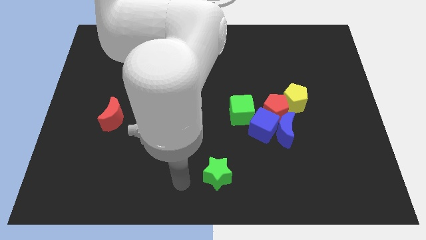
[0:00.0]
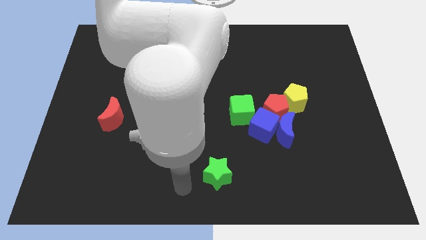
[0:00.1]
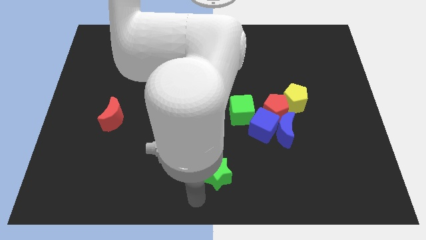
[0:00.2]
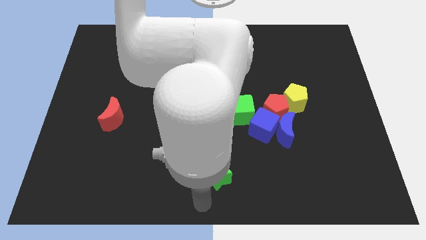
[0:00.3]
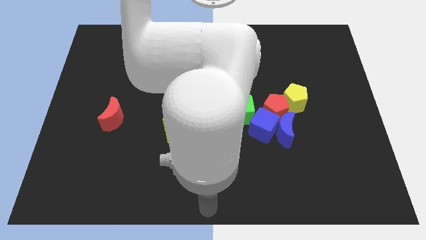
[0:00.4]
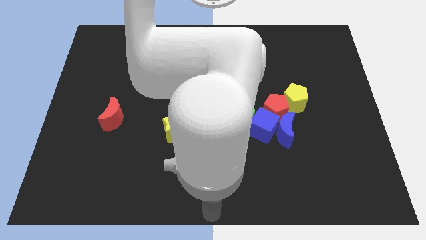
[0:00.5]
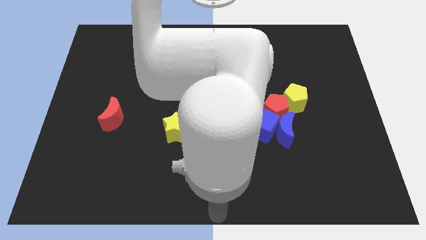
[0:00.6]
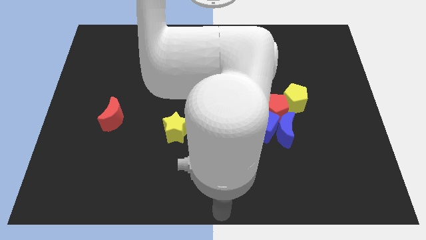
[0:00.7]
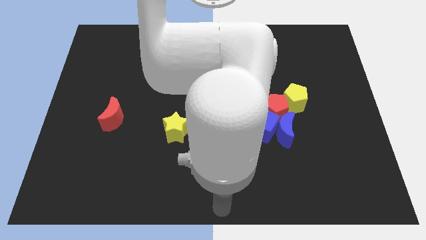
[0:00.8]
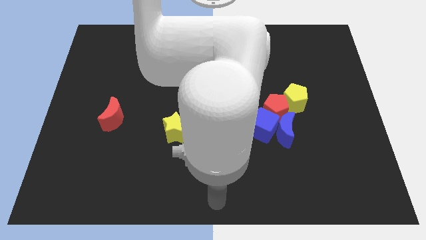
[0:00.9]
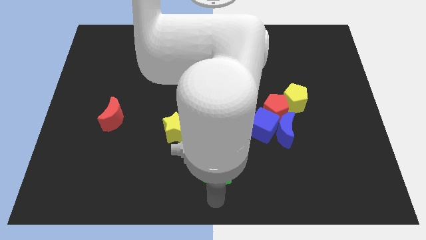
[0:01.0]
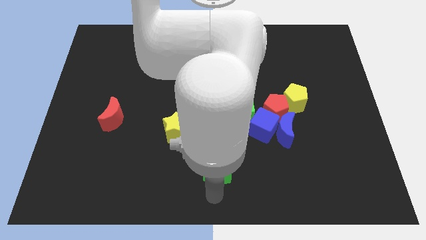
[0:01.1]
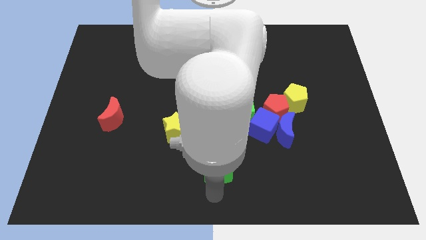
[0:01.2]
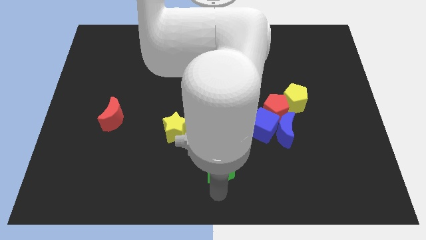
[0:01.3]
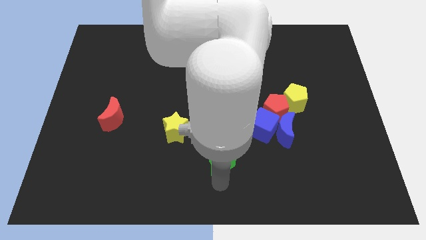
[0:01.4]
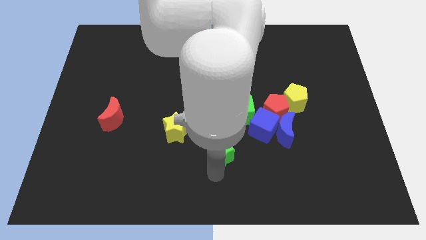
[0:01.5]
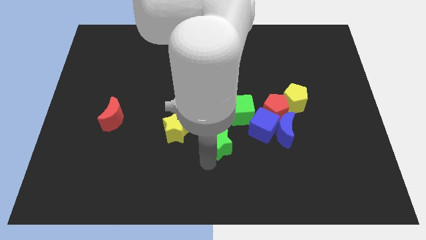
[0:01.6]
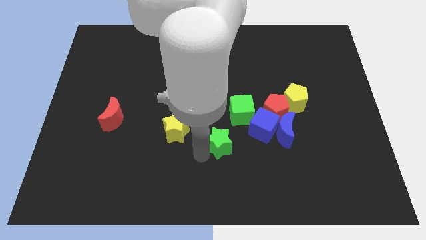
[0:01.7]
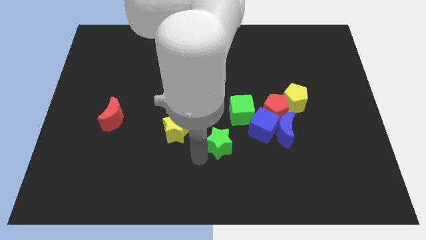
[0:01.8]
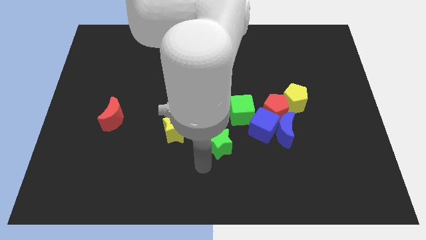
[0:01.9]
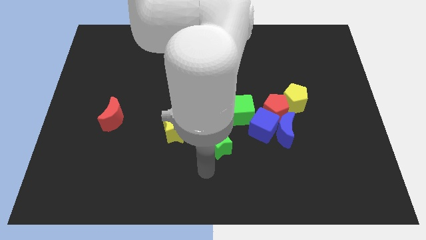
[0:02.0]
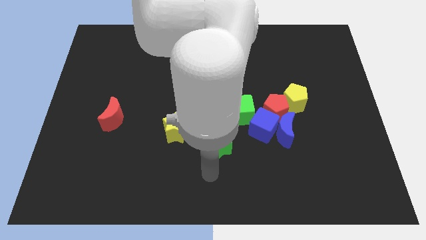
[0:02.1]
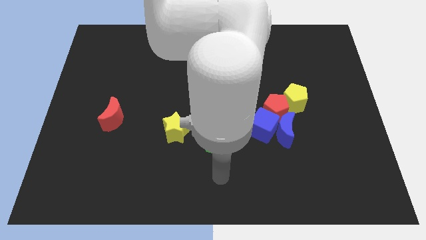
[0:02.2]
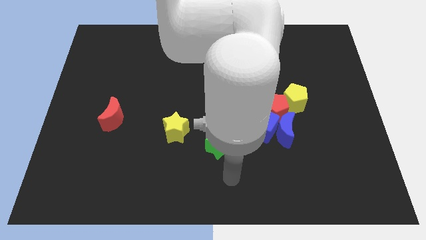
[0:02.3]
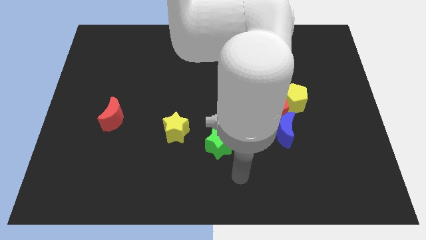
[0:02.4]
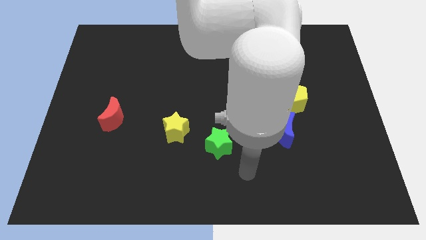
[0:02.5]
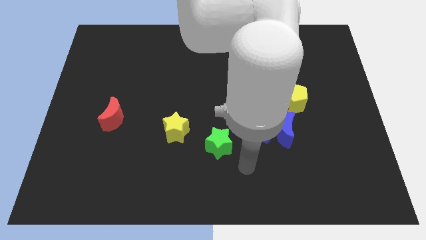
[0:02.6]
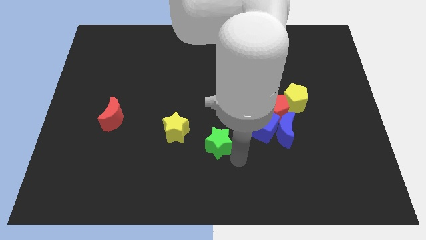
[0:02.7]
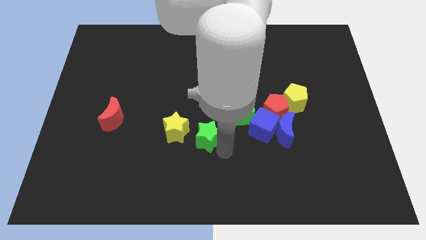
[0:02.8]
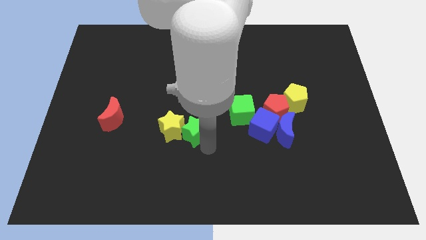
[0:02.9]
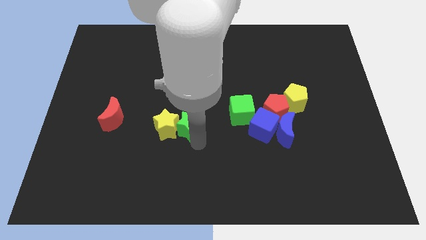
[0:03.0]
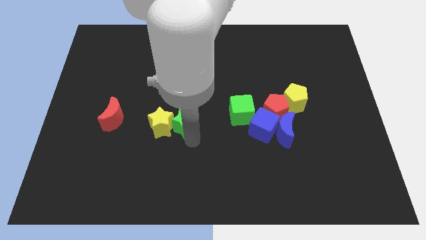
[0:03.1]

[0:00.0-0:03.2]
slide green star into yellow star

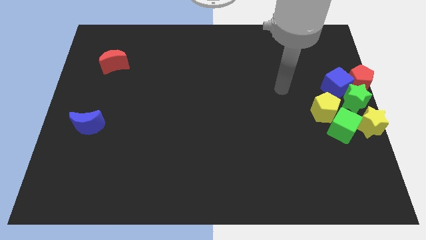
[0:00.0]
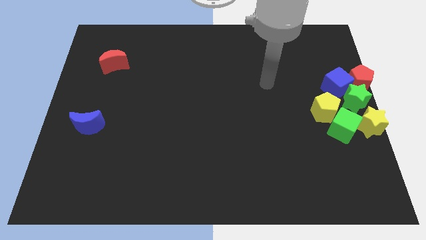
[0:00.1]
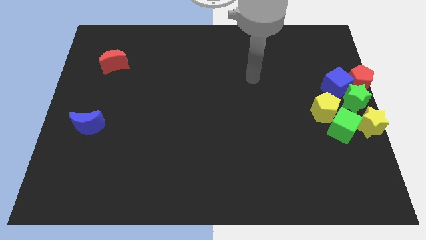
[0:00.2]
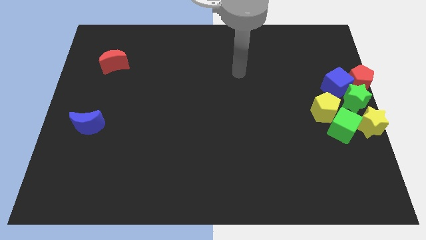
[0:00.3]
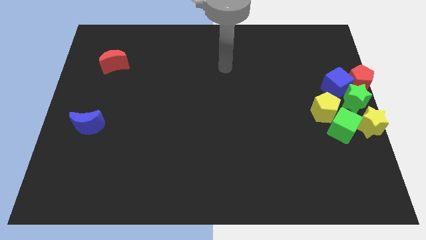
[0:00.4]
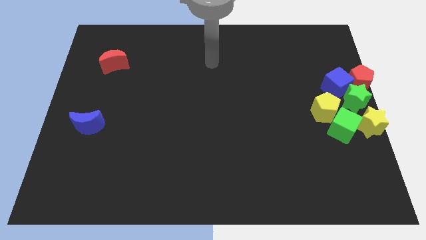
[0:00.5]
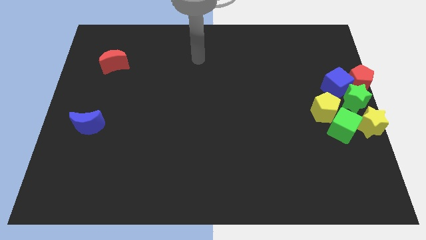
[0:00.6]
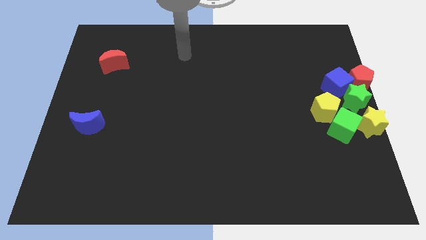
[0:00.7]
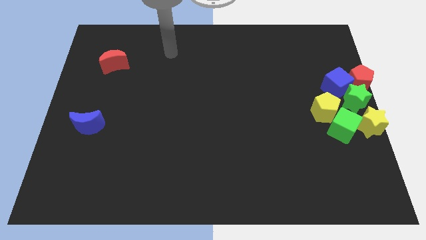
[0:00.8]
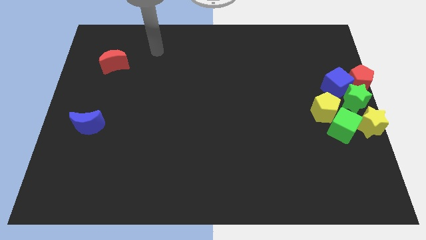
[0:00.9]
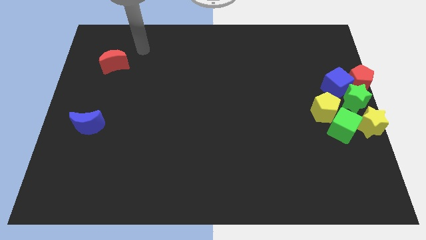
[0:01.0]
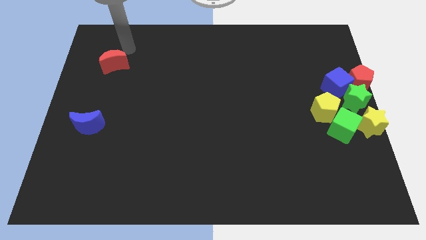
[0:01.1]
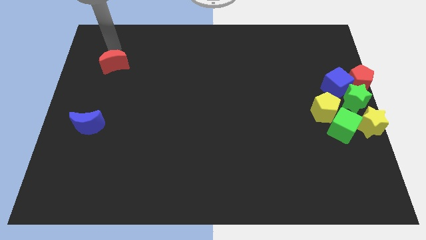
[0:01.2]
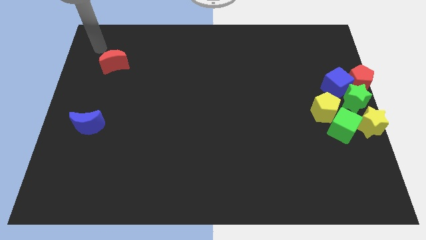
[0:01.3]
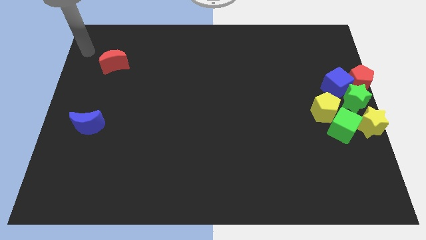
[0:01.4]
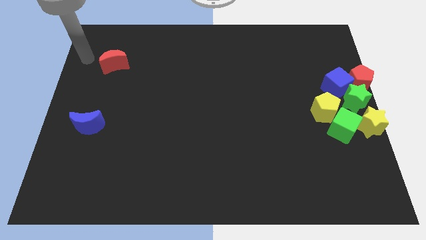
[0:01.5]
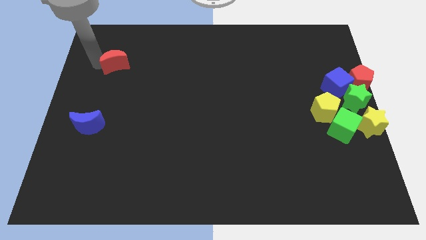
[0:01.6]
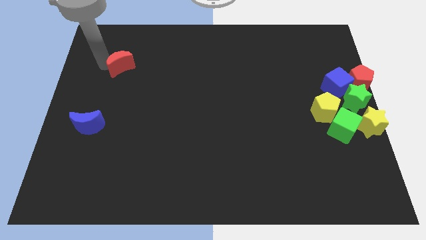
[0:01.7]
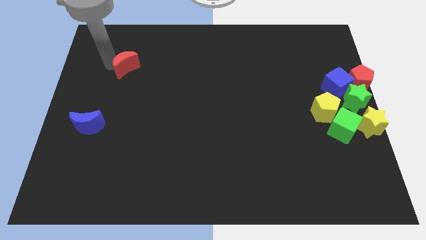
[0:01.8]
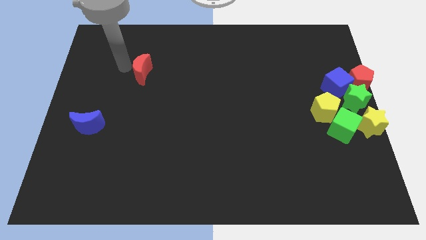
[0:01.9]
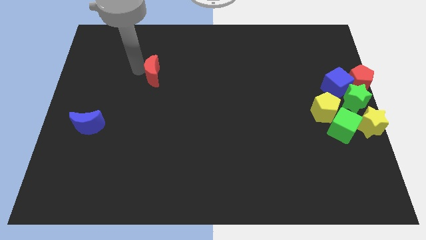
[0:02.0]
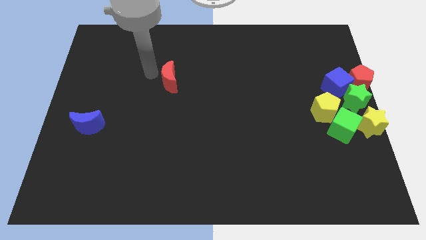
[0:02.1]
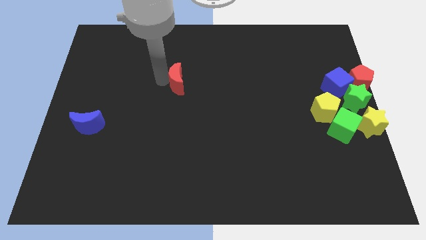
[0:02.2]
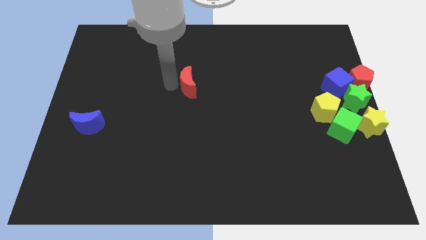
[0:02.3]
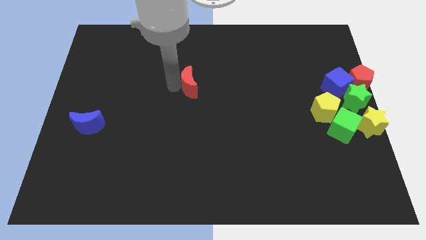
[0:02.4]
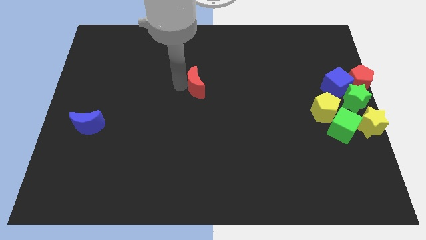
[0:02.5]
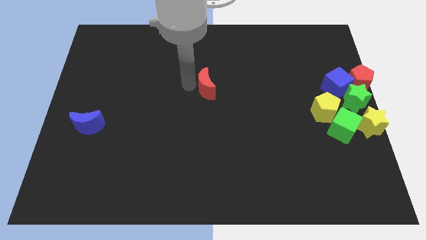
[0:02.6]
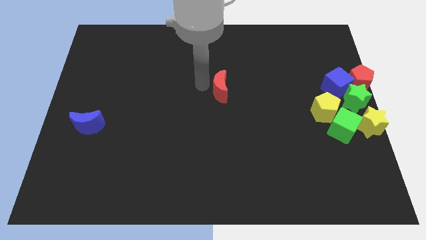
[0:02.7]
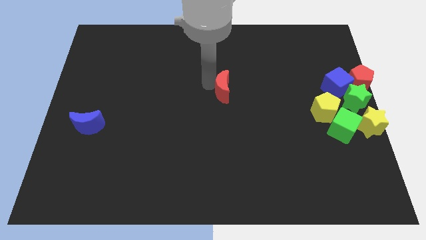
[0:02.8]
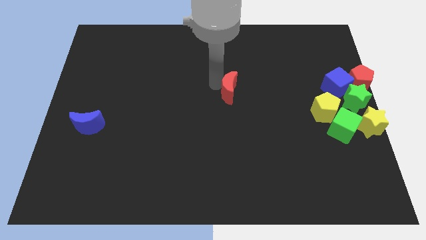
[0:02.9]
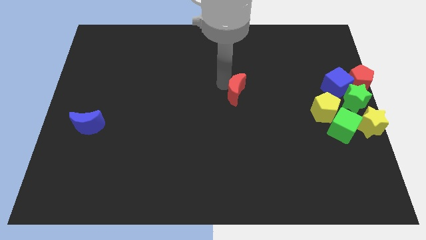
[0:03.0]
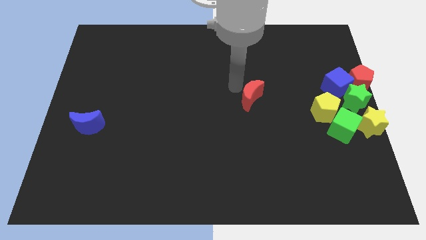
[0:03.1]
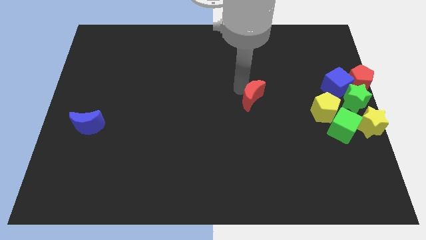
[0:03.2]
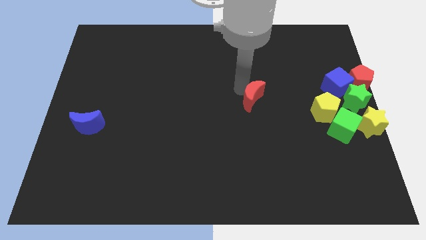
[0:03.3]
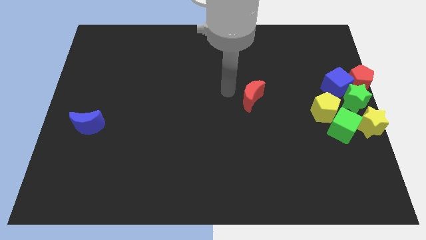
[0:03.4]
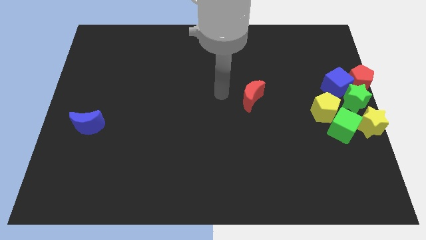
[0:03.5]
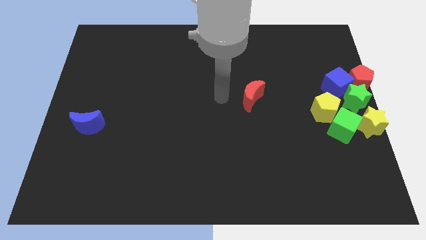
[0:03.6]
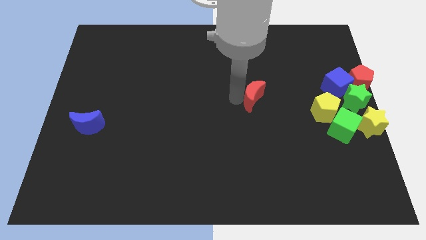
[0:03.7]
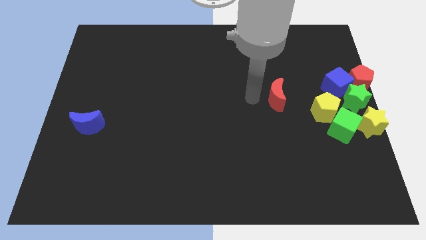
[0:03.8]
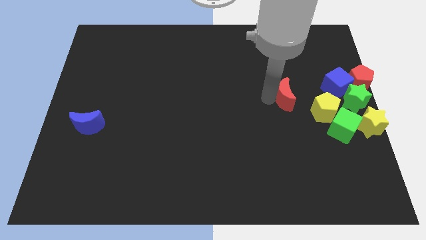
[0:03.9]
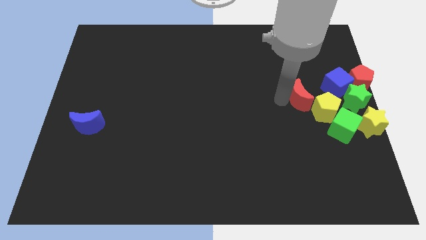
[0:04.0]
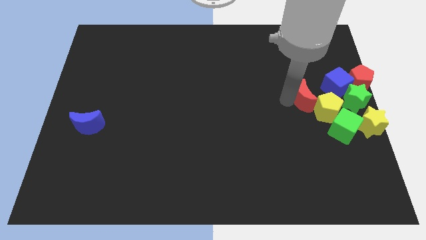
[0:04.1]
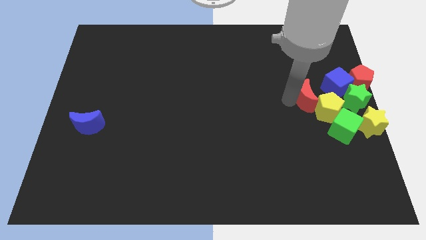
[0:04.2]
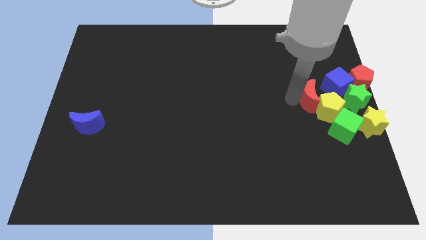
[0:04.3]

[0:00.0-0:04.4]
move the red crescent towards the yellow pentagon

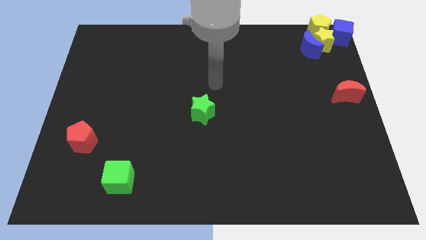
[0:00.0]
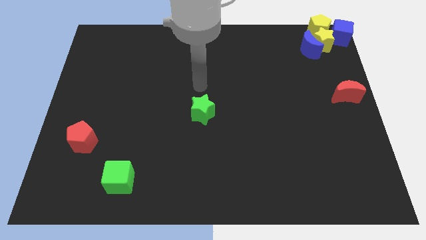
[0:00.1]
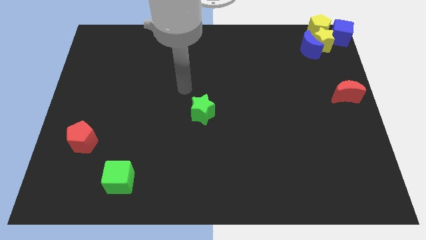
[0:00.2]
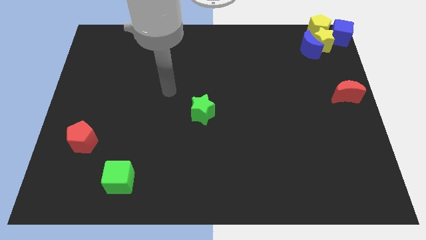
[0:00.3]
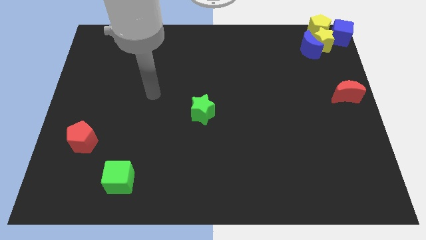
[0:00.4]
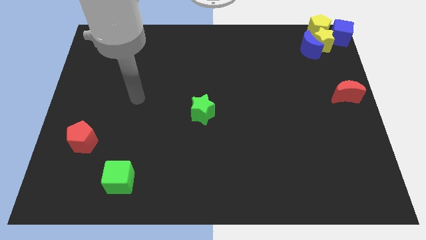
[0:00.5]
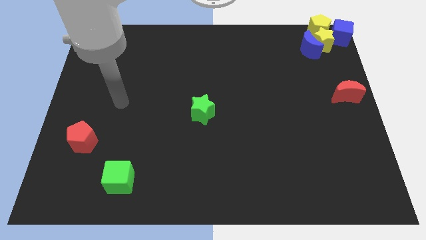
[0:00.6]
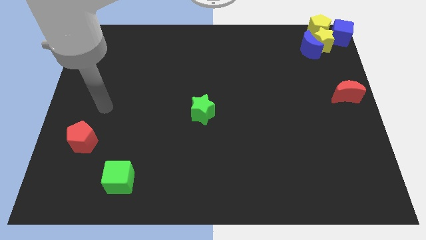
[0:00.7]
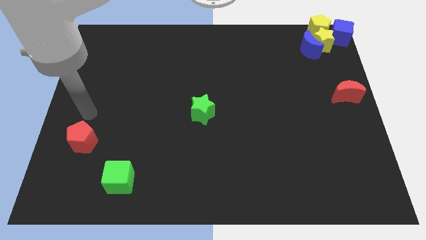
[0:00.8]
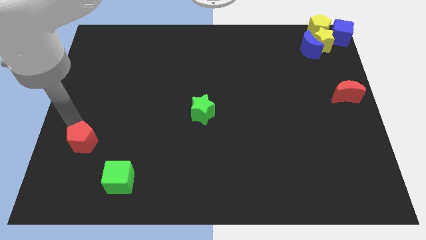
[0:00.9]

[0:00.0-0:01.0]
move your hand towards red pentagon

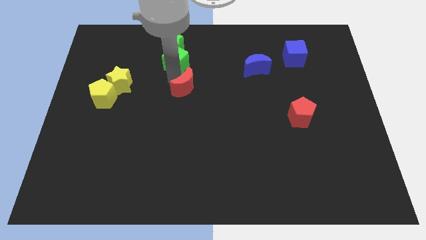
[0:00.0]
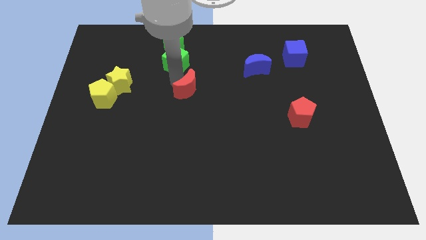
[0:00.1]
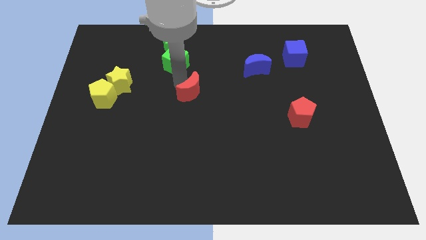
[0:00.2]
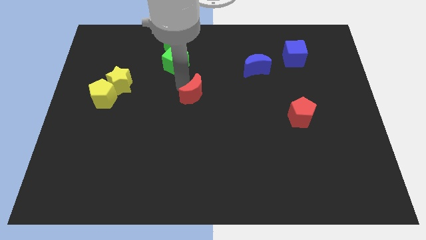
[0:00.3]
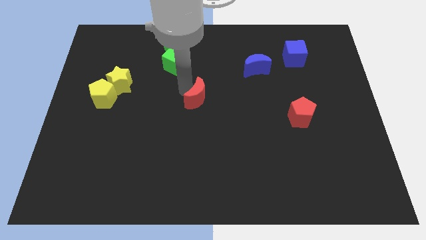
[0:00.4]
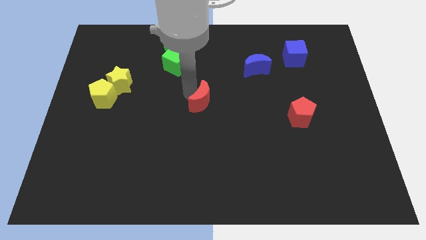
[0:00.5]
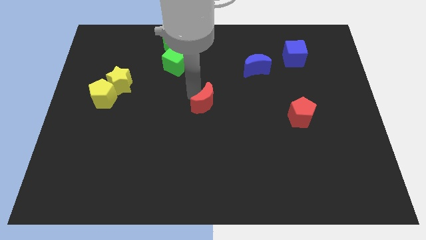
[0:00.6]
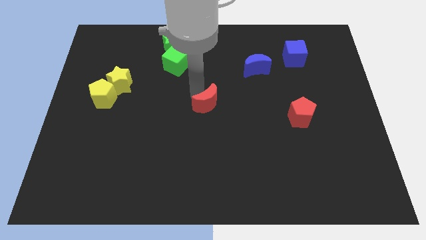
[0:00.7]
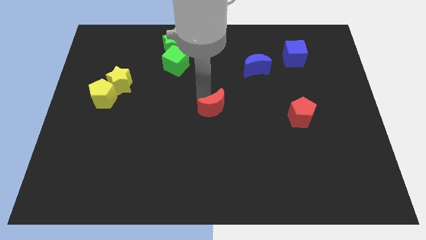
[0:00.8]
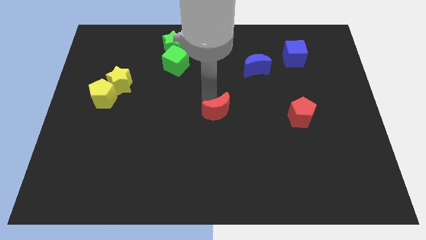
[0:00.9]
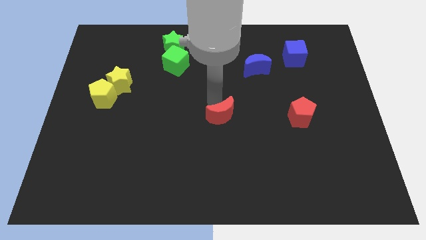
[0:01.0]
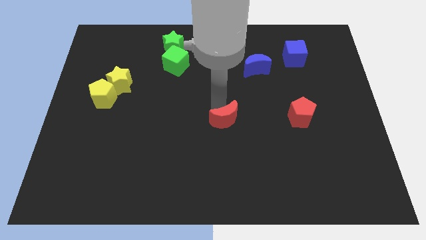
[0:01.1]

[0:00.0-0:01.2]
place the red moon diagonal to the blue moon
